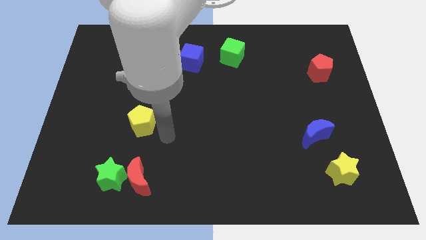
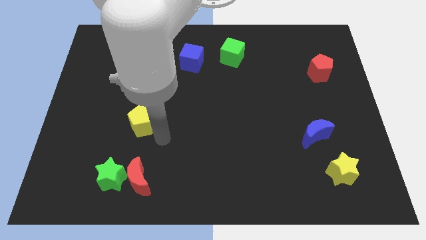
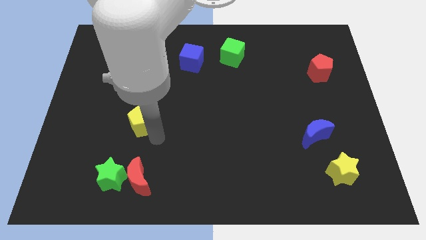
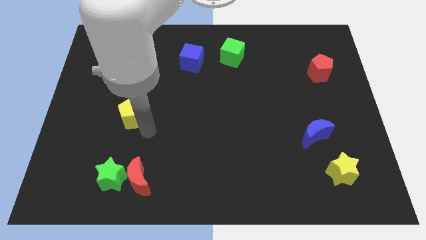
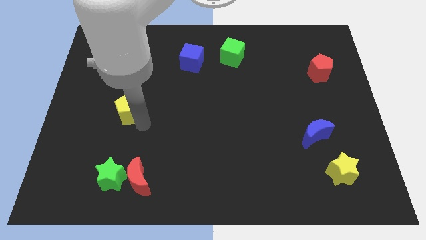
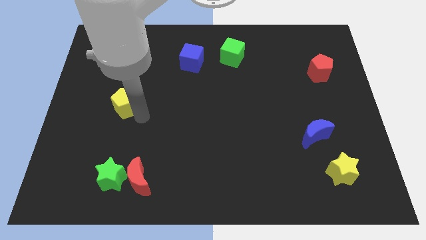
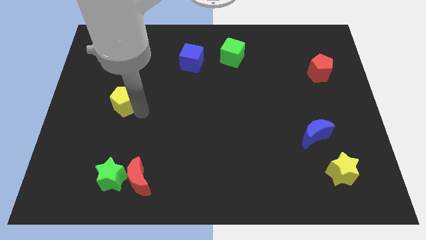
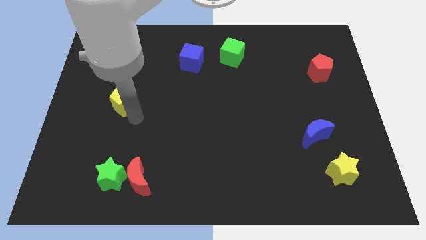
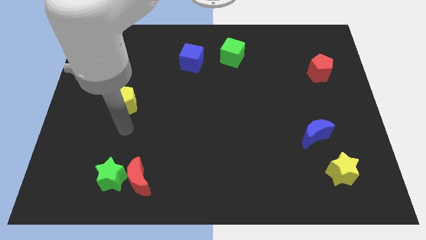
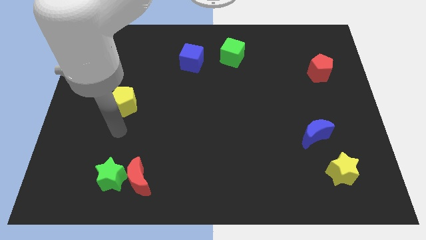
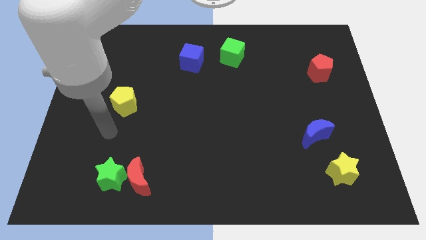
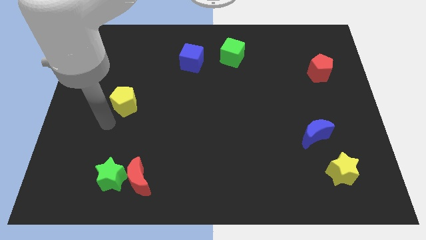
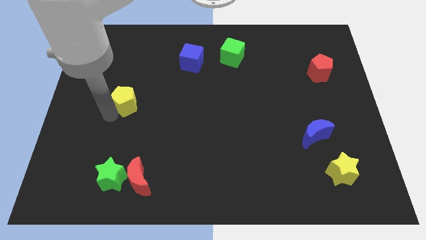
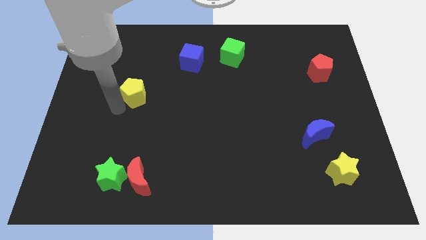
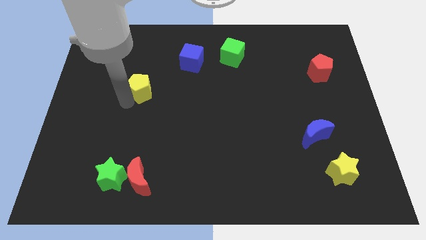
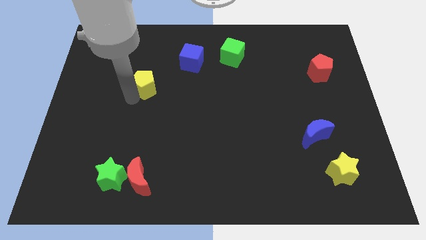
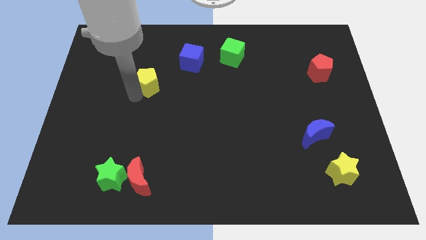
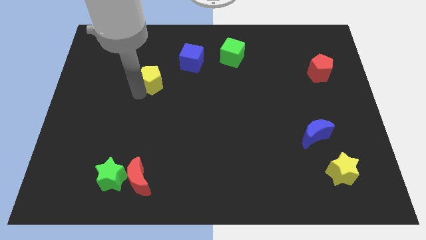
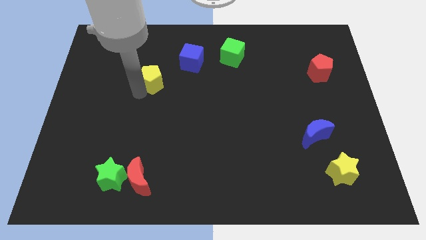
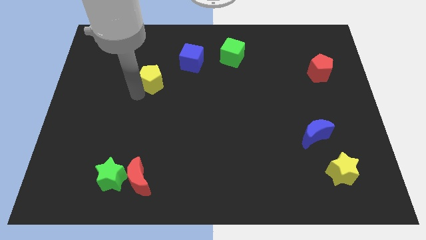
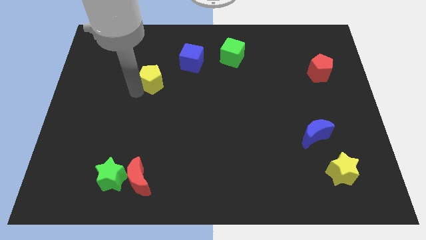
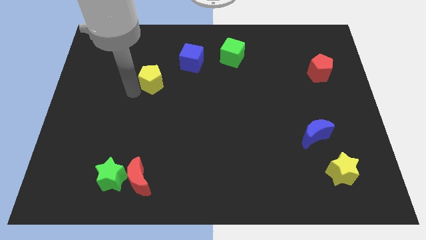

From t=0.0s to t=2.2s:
slide the yellow pentagon diagonally to the blue cube

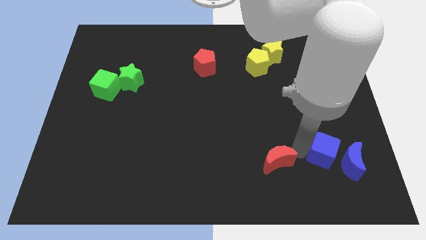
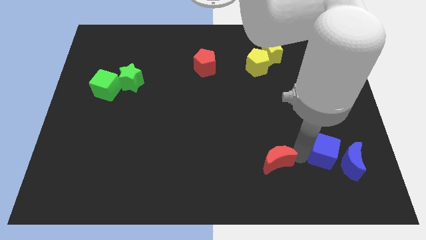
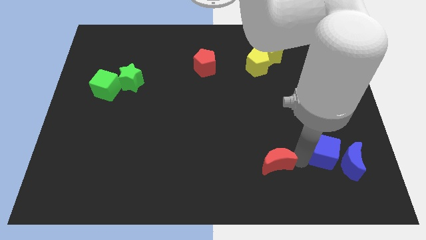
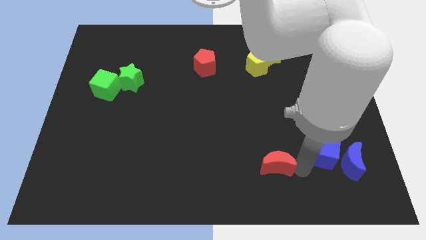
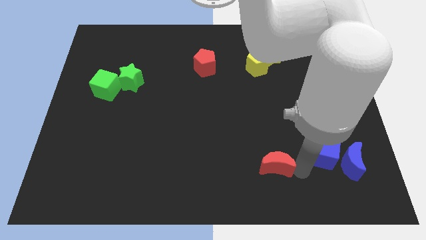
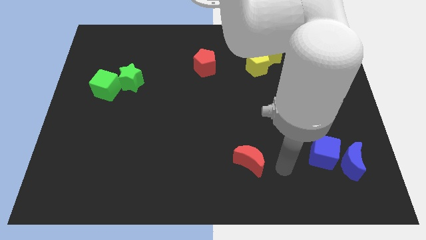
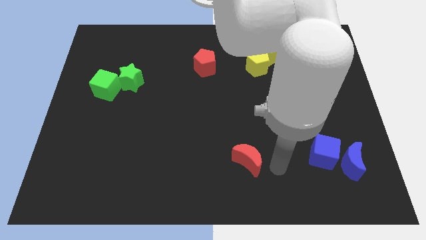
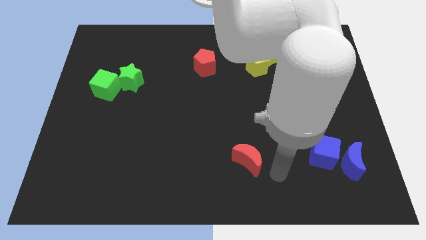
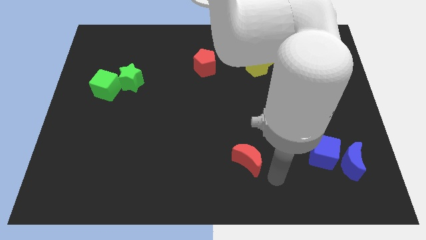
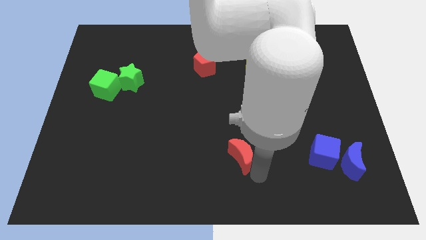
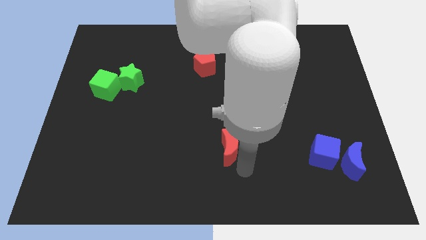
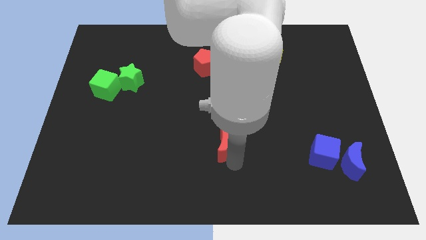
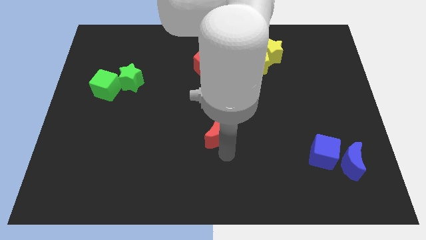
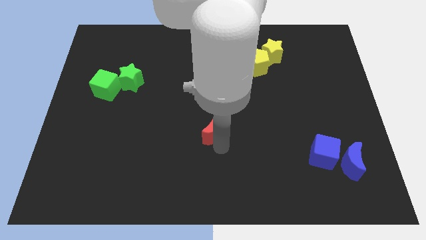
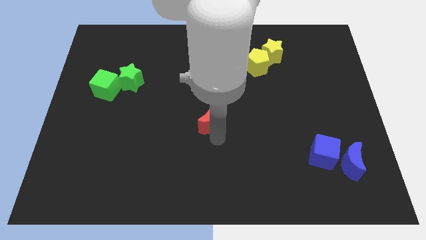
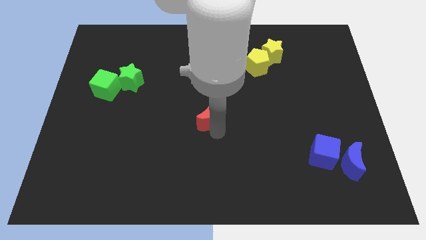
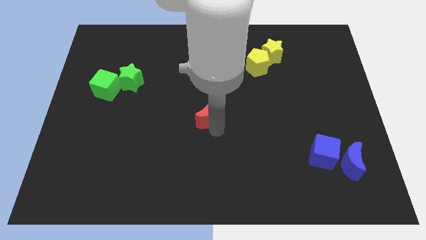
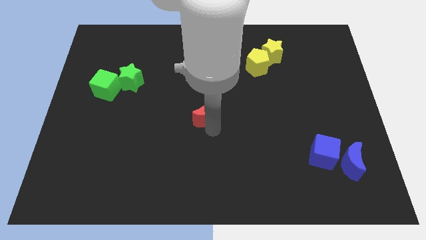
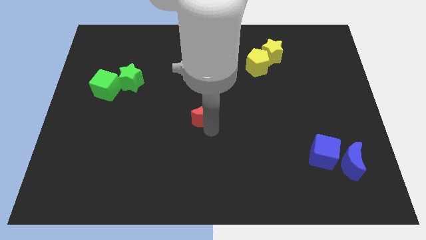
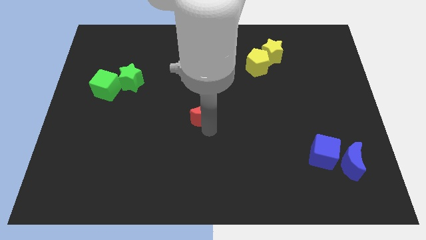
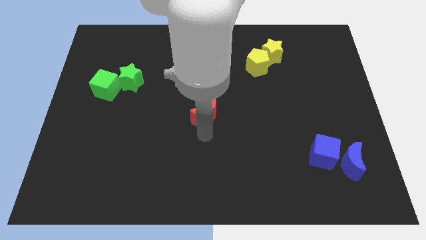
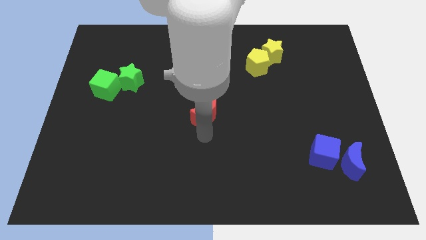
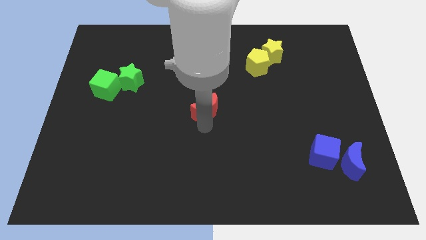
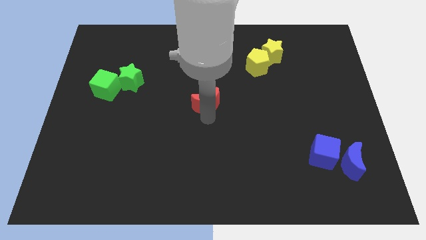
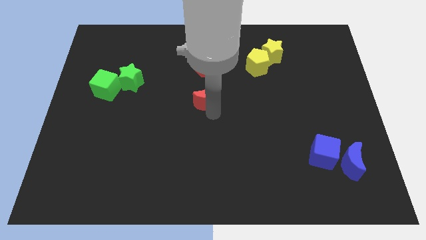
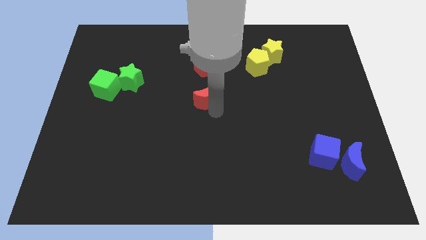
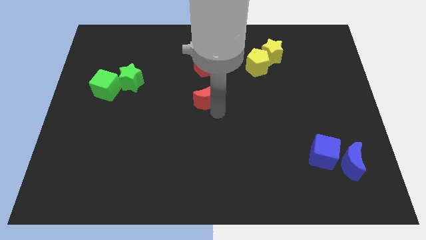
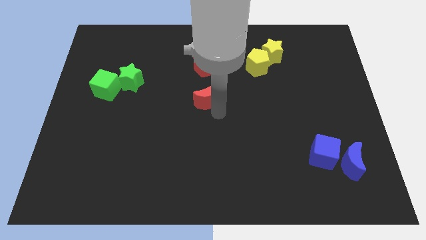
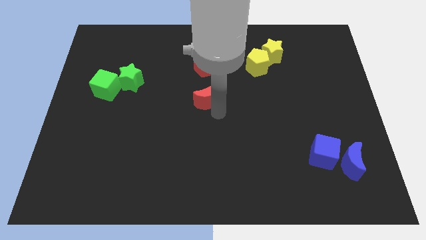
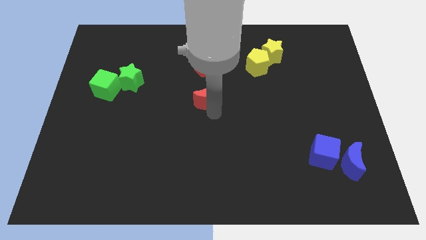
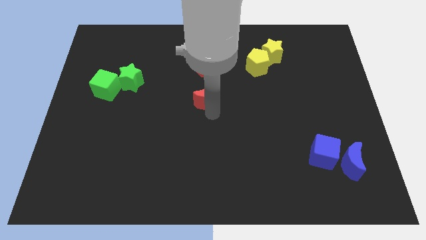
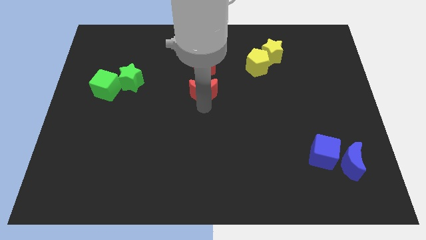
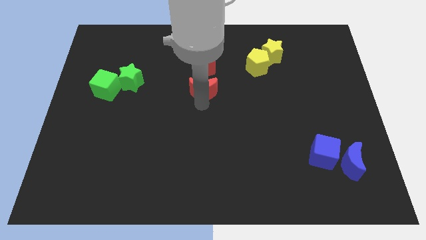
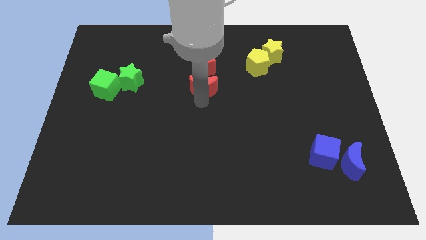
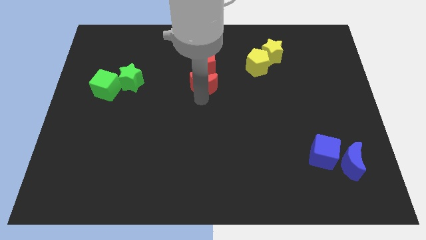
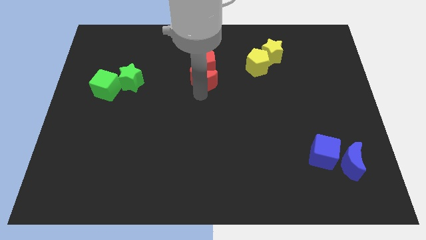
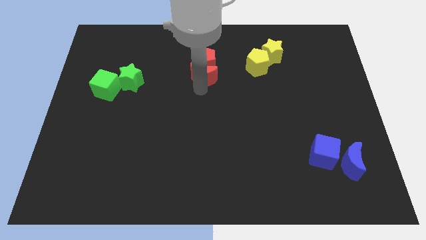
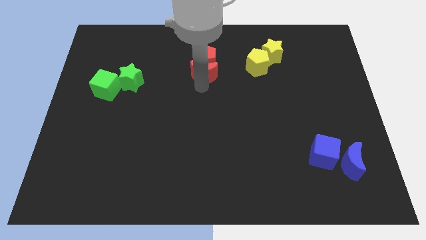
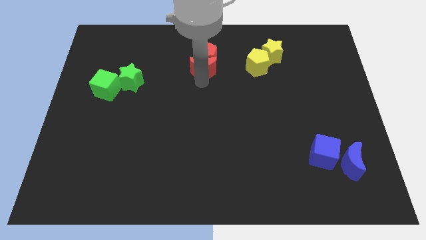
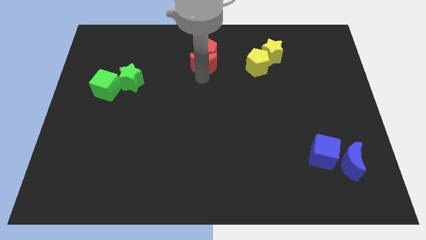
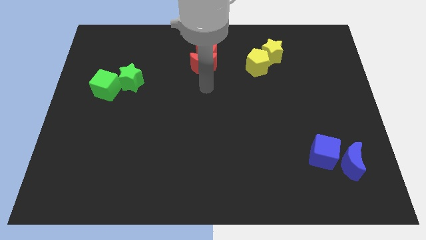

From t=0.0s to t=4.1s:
push the red crescent close to the red pentagon

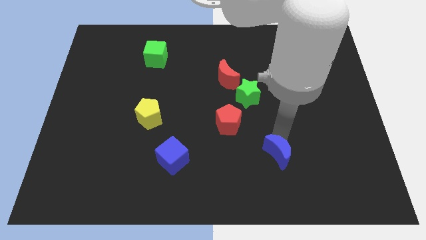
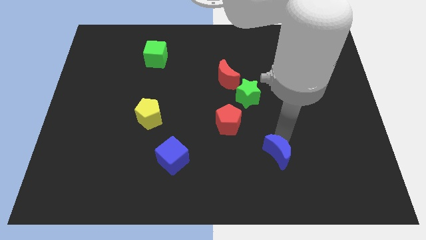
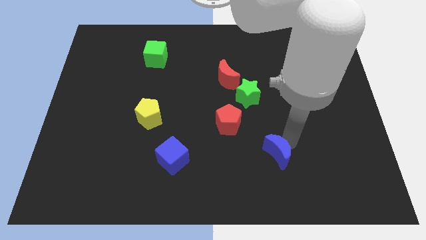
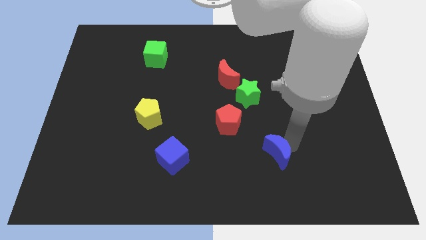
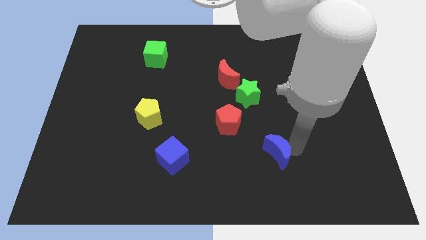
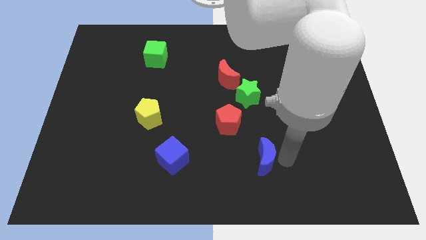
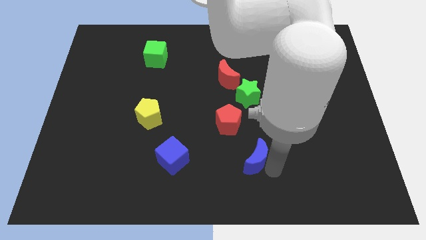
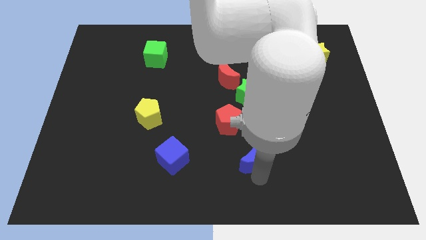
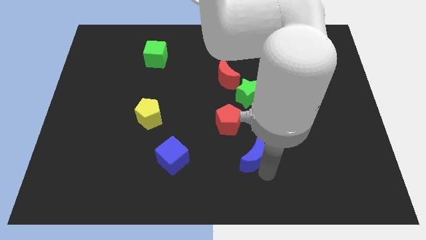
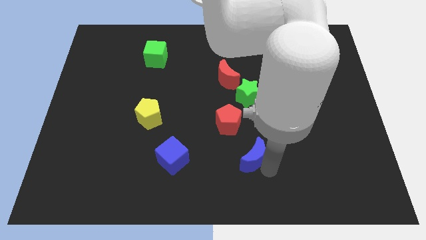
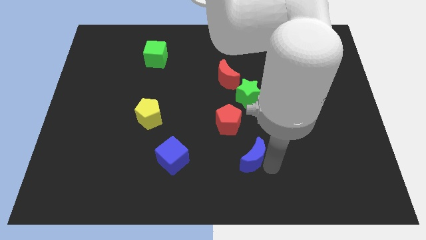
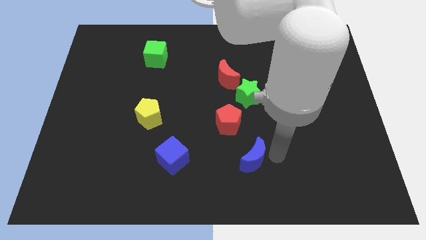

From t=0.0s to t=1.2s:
push the blue moon to the right bottom of the red pentagon

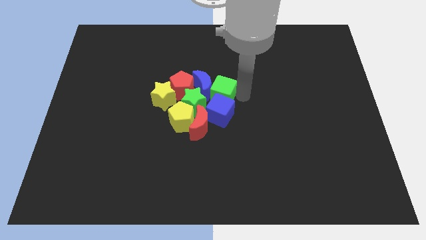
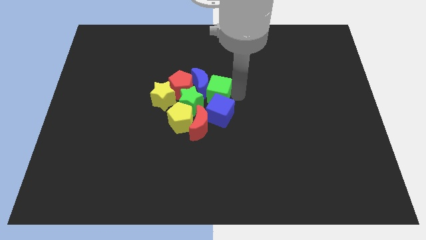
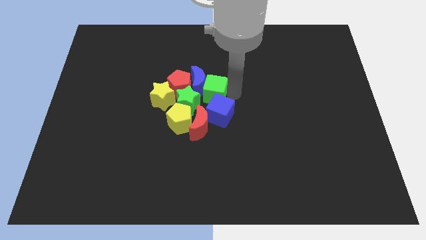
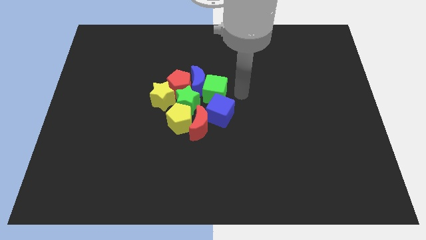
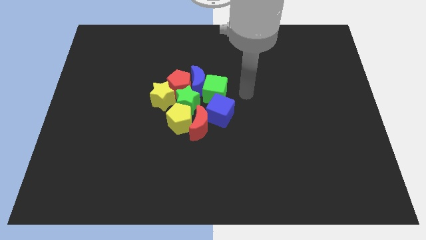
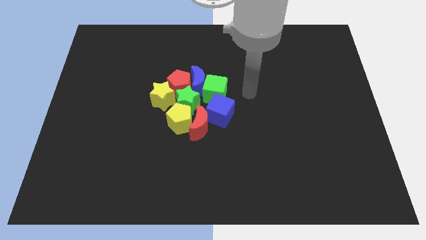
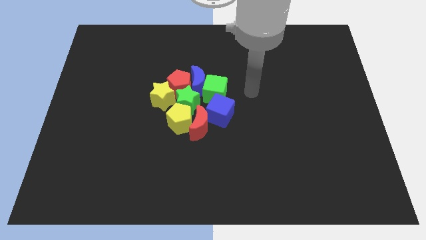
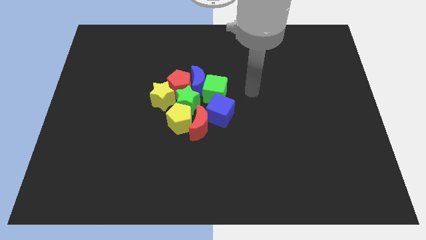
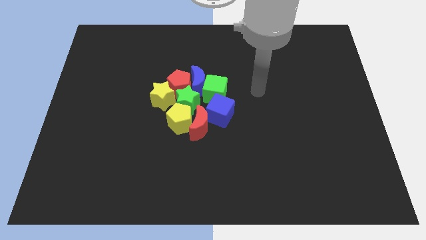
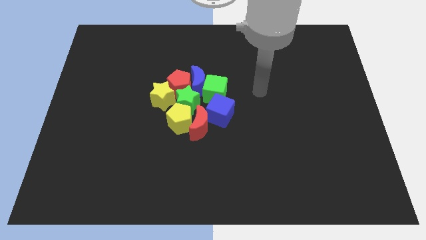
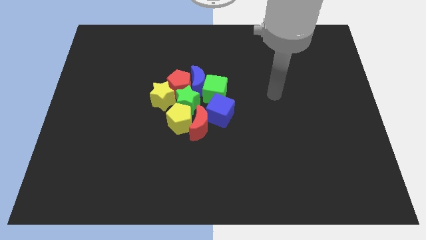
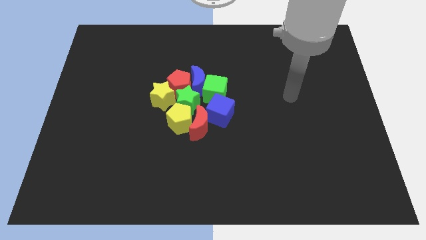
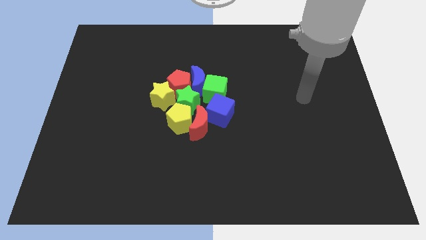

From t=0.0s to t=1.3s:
drag your arm away from green cube

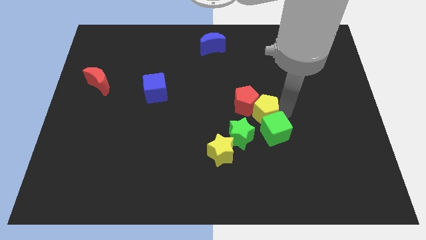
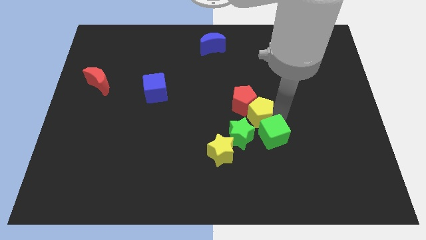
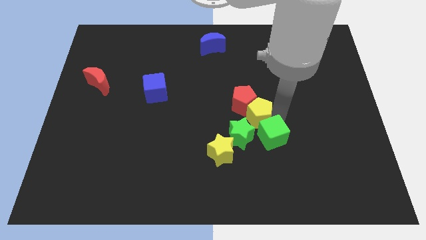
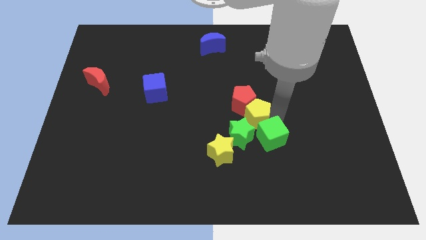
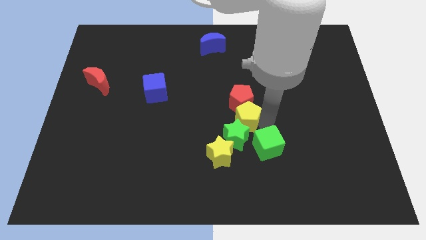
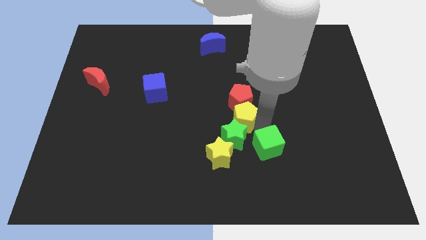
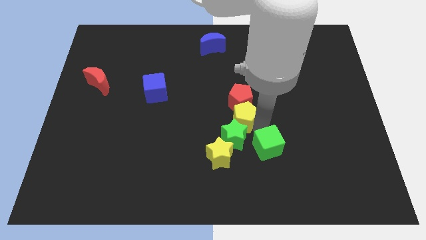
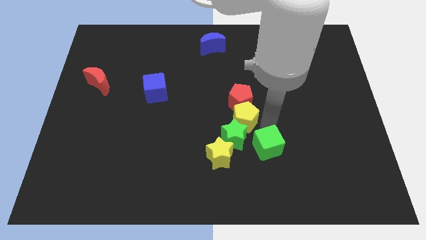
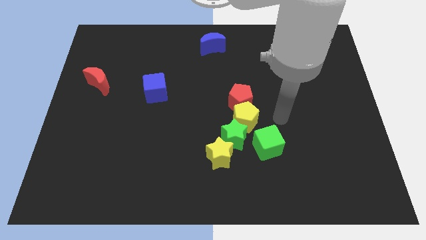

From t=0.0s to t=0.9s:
place yellow pentagon below red pentagon
